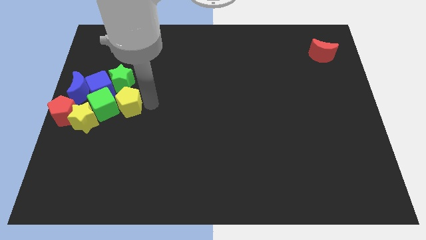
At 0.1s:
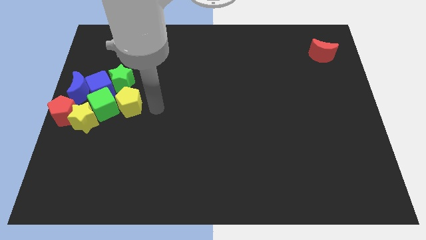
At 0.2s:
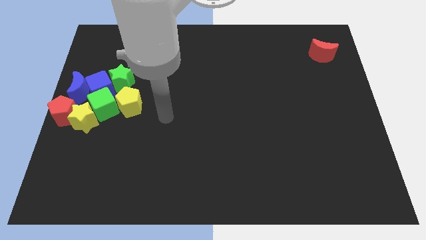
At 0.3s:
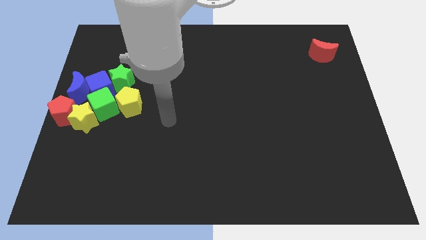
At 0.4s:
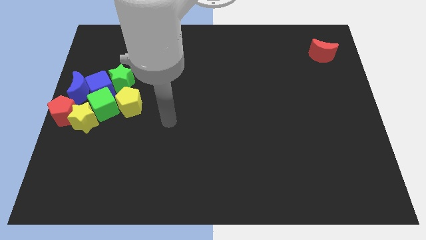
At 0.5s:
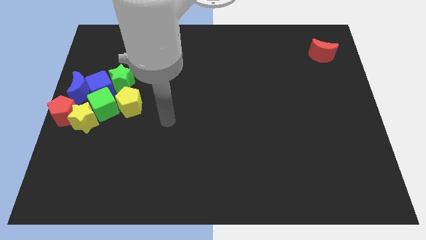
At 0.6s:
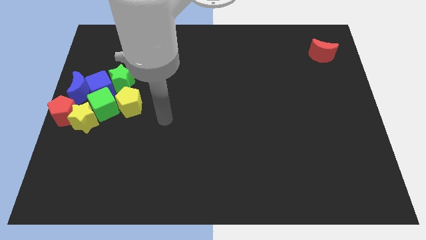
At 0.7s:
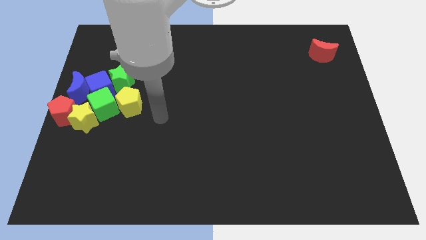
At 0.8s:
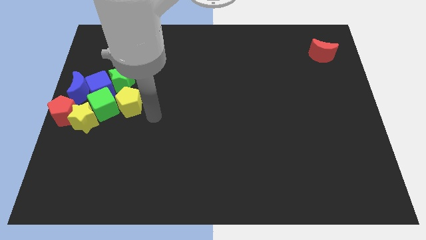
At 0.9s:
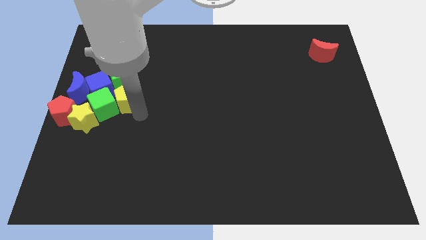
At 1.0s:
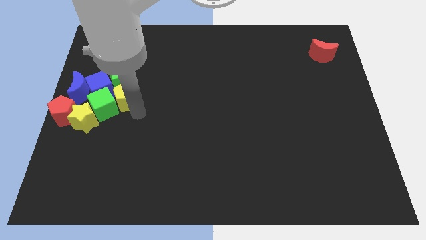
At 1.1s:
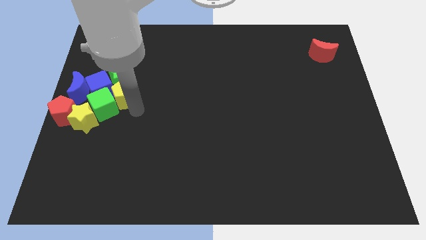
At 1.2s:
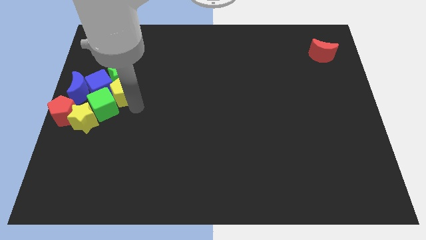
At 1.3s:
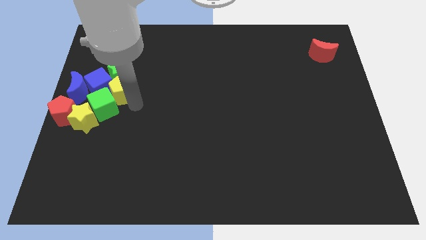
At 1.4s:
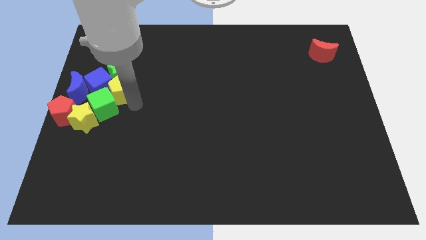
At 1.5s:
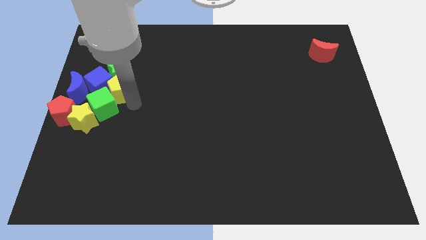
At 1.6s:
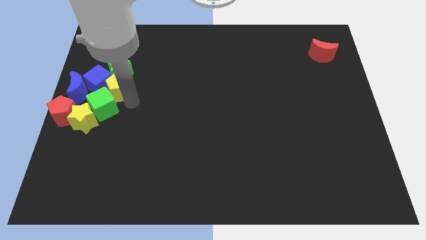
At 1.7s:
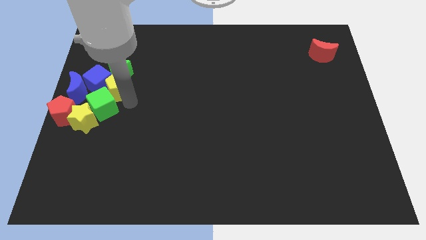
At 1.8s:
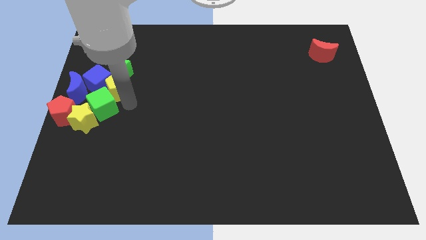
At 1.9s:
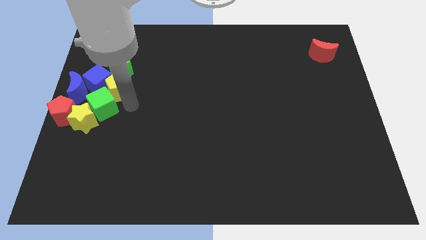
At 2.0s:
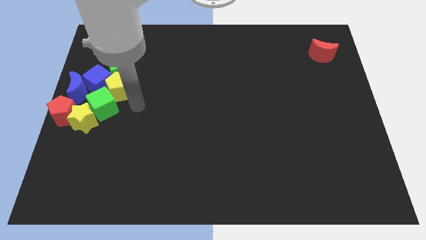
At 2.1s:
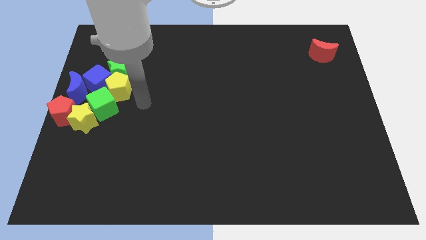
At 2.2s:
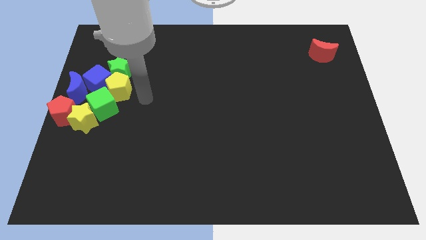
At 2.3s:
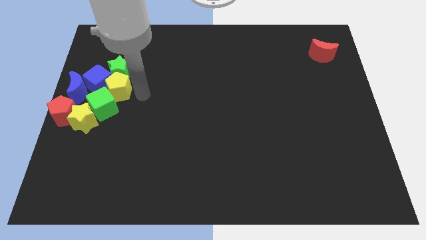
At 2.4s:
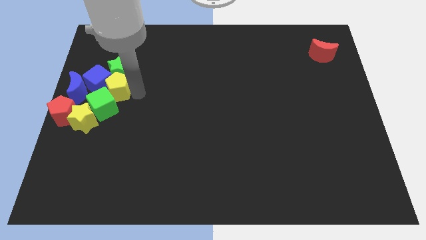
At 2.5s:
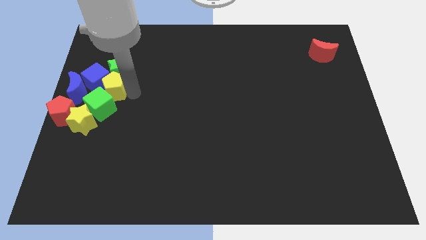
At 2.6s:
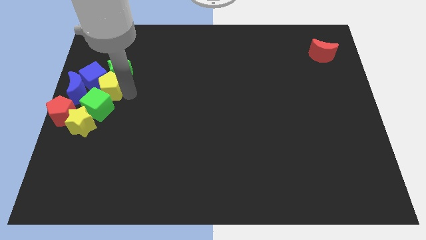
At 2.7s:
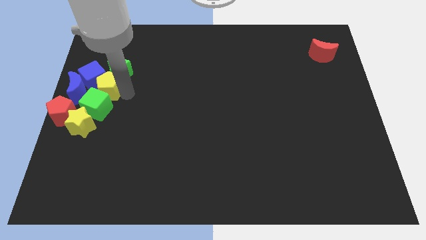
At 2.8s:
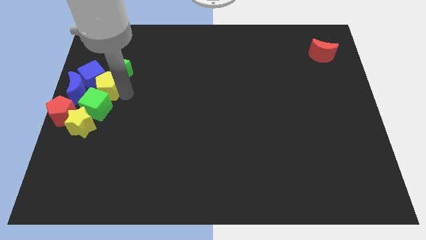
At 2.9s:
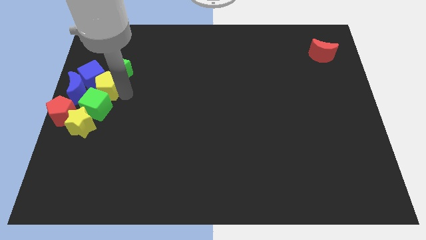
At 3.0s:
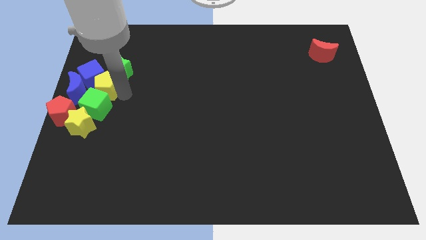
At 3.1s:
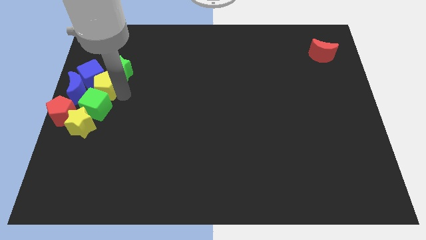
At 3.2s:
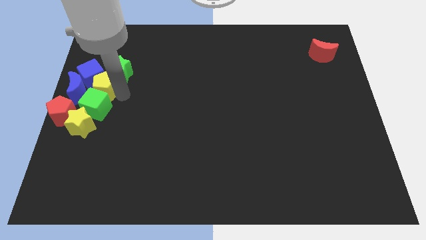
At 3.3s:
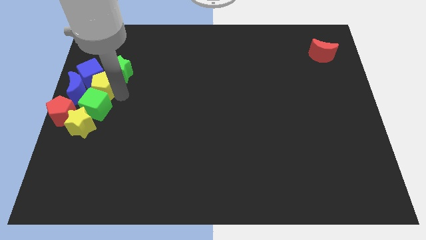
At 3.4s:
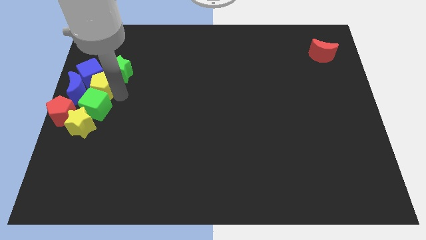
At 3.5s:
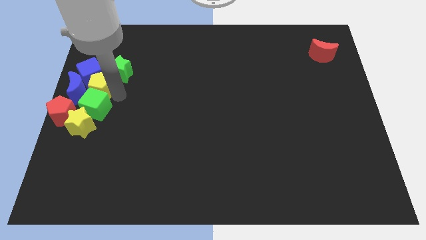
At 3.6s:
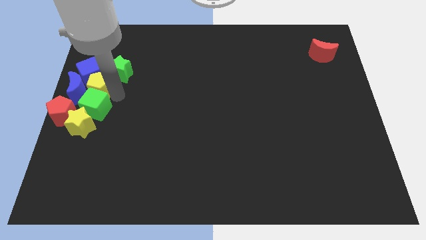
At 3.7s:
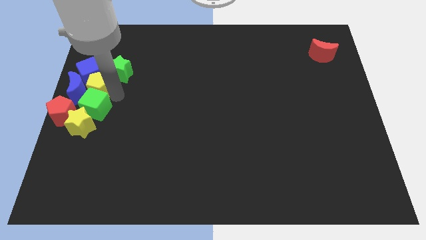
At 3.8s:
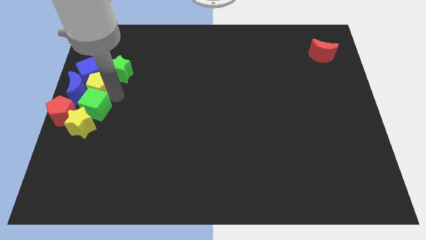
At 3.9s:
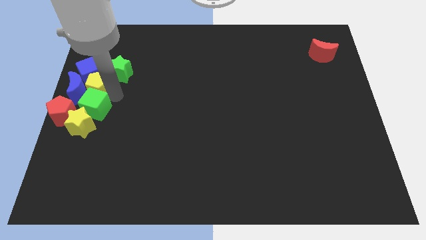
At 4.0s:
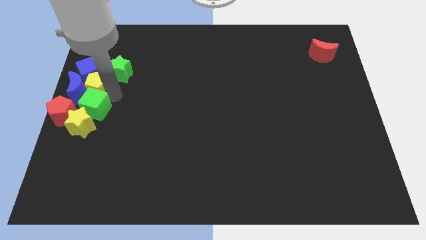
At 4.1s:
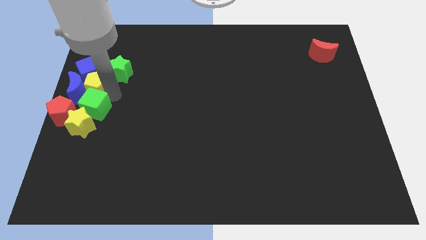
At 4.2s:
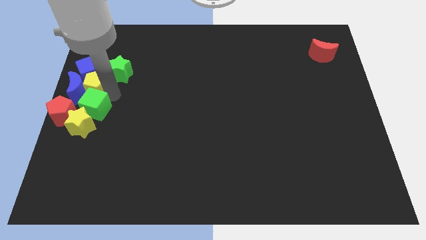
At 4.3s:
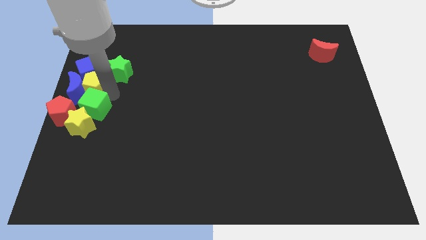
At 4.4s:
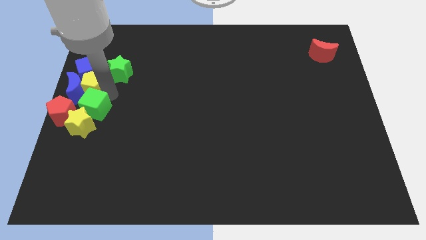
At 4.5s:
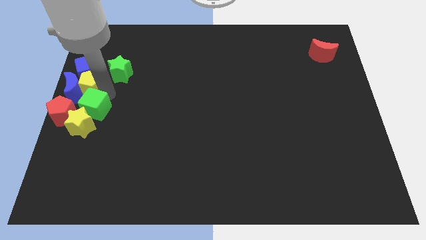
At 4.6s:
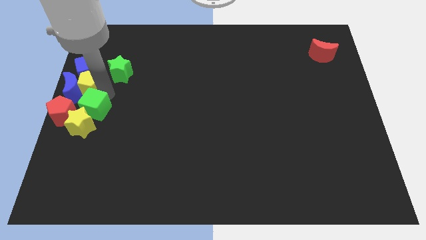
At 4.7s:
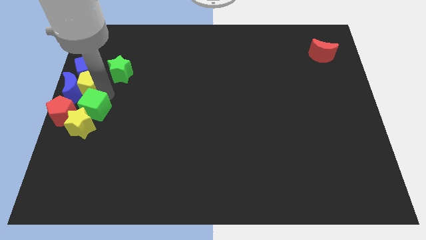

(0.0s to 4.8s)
adjust the group of blocks at the left side of the table

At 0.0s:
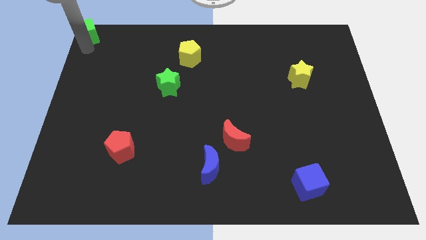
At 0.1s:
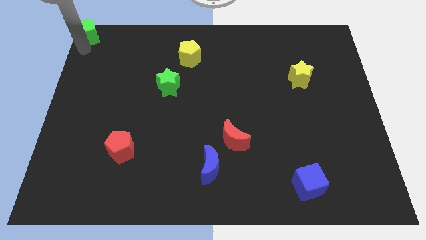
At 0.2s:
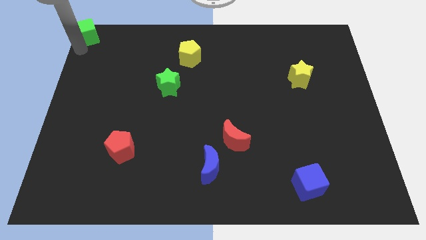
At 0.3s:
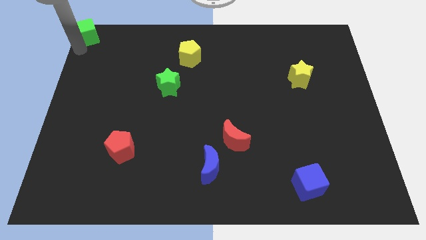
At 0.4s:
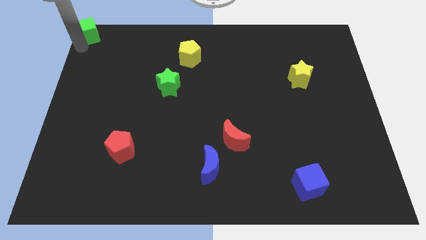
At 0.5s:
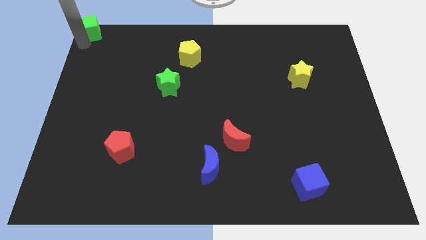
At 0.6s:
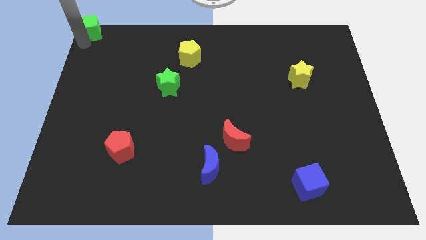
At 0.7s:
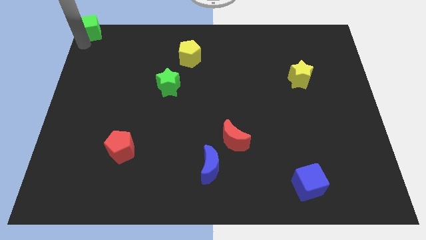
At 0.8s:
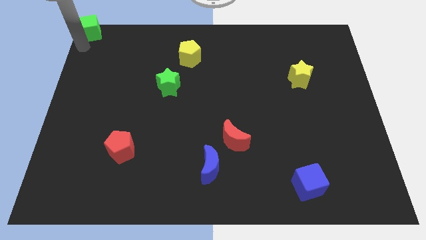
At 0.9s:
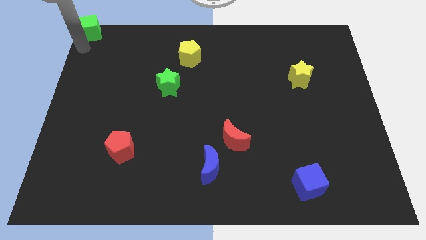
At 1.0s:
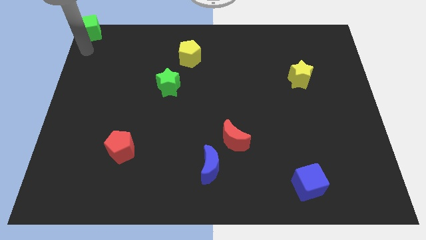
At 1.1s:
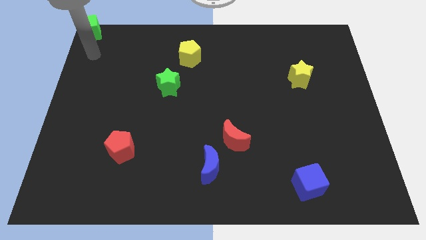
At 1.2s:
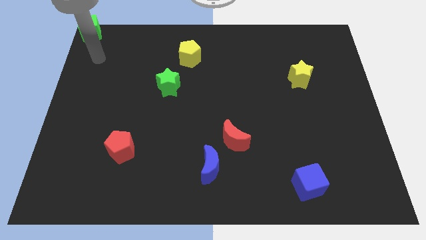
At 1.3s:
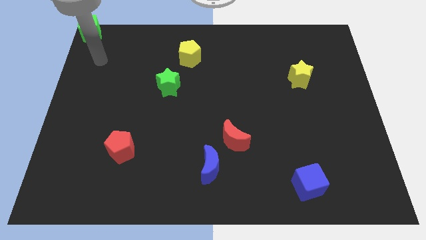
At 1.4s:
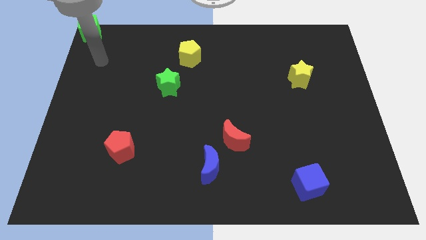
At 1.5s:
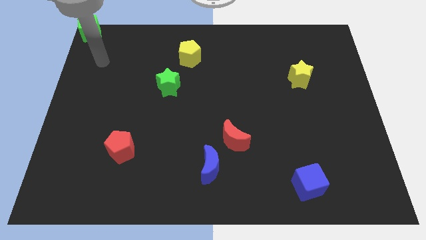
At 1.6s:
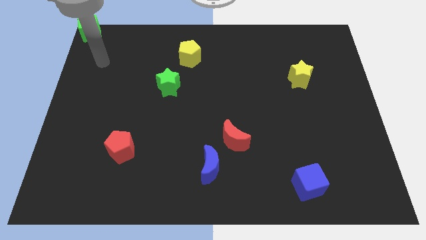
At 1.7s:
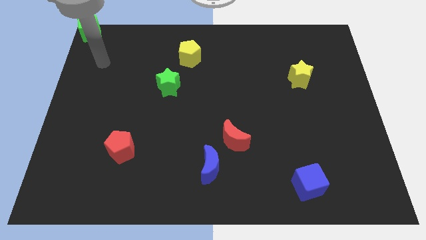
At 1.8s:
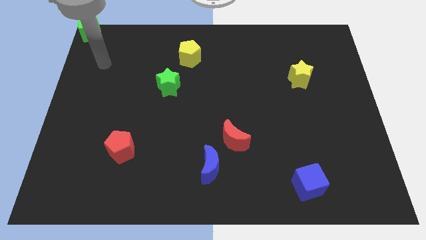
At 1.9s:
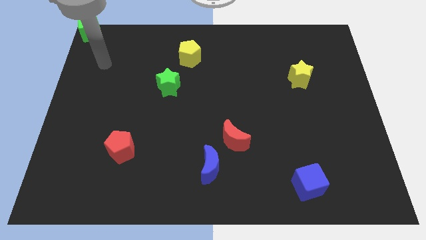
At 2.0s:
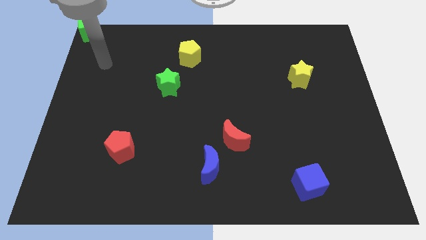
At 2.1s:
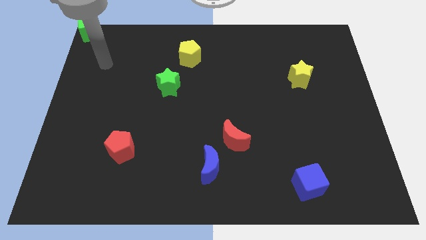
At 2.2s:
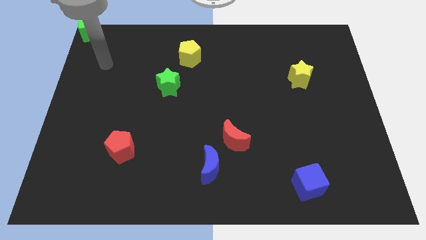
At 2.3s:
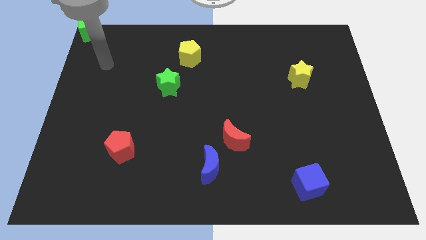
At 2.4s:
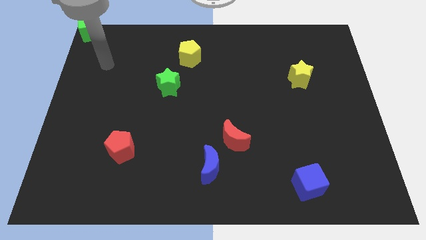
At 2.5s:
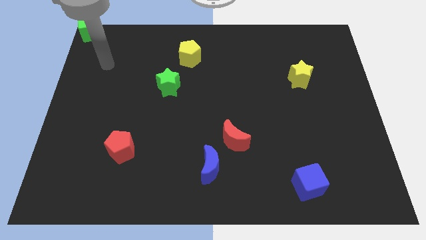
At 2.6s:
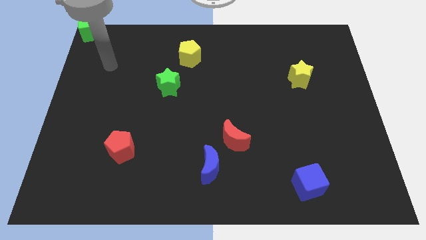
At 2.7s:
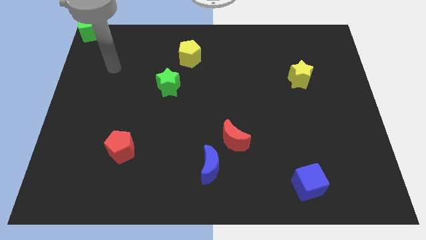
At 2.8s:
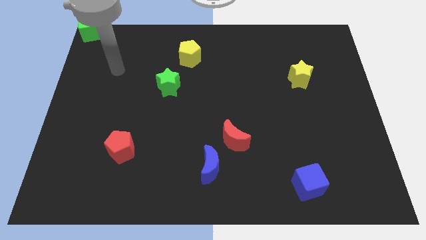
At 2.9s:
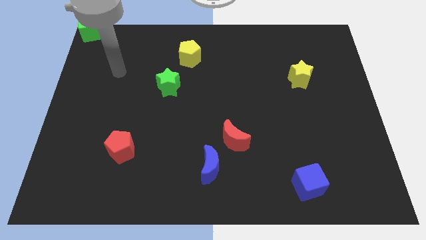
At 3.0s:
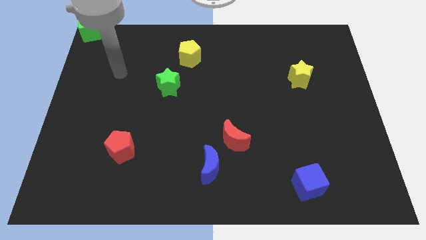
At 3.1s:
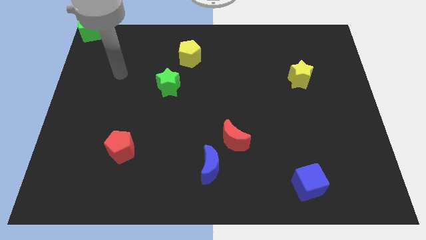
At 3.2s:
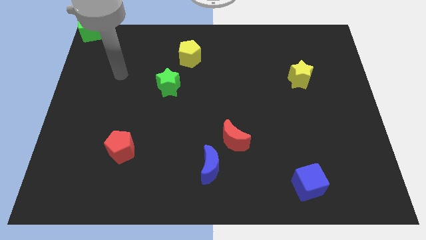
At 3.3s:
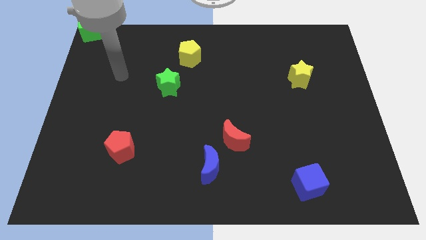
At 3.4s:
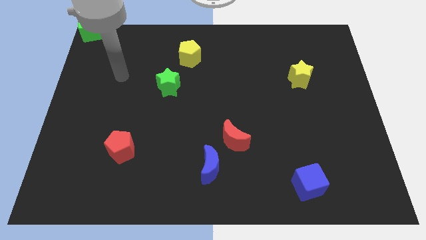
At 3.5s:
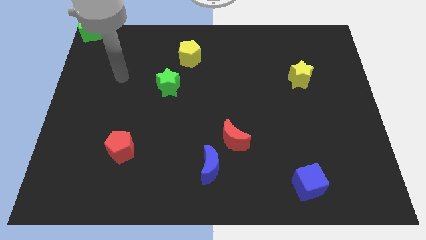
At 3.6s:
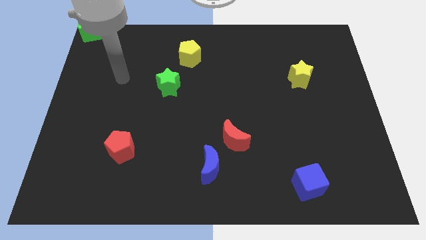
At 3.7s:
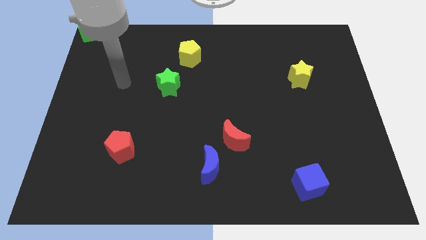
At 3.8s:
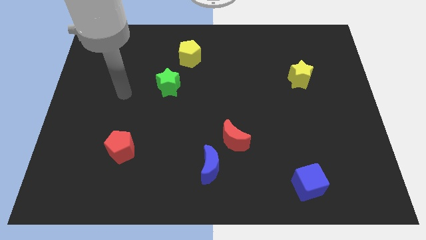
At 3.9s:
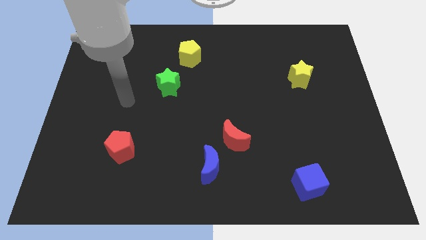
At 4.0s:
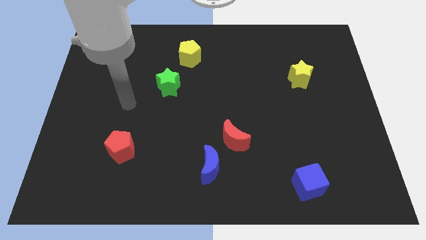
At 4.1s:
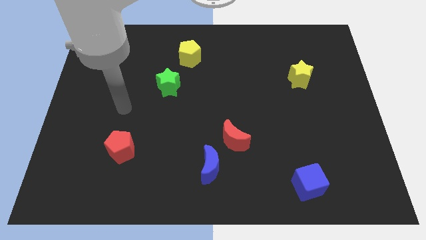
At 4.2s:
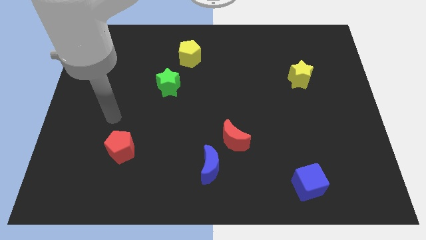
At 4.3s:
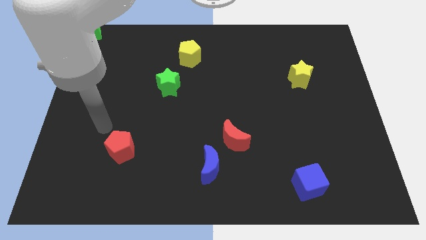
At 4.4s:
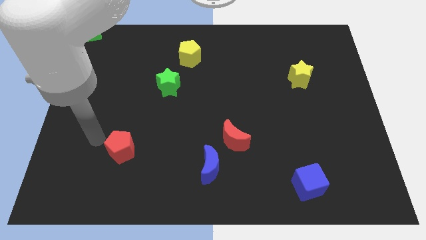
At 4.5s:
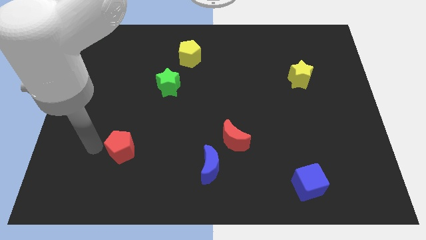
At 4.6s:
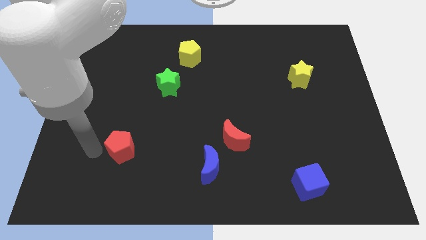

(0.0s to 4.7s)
place your arm to the left of red pentagon
